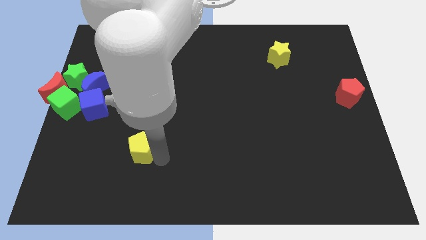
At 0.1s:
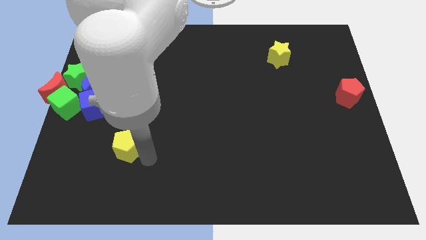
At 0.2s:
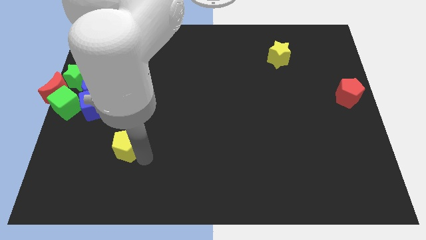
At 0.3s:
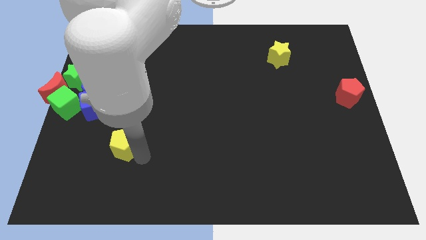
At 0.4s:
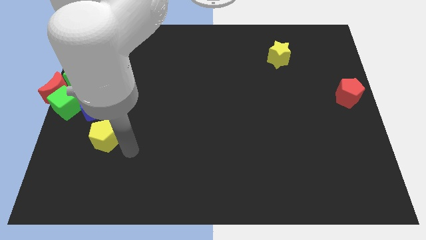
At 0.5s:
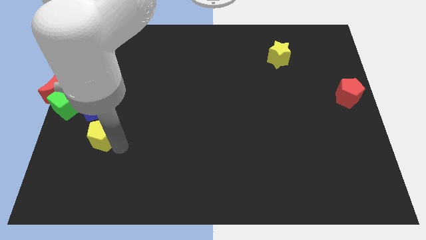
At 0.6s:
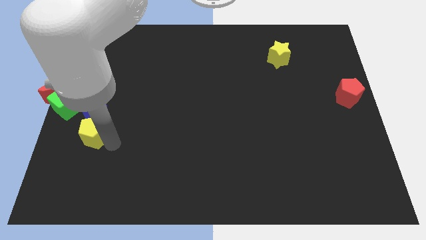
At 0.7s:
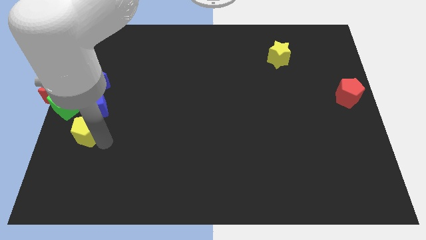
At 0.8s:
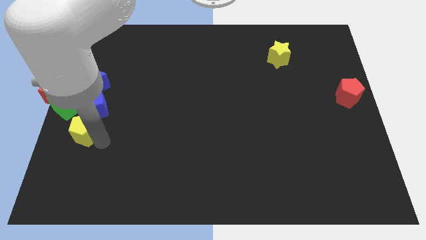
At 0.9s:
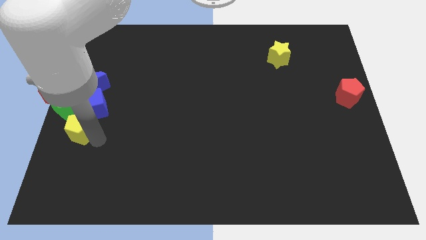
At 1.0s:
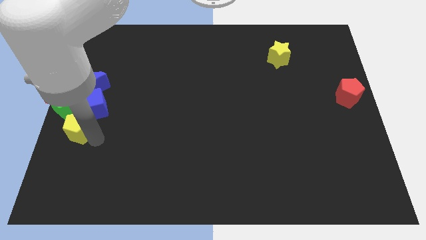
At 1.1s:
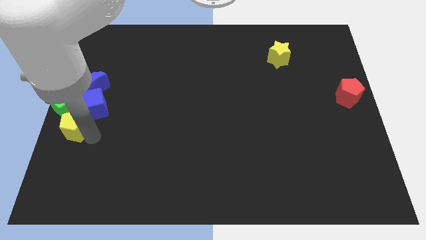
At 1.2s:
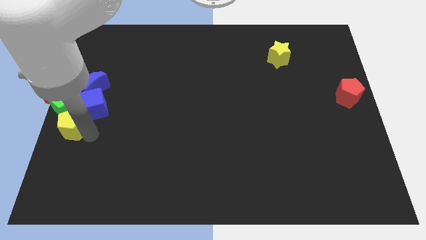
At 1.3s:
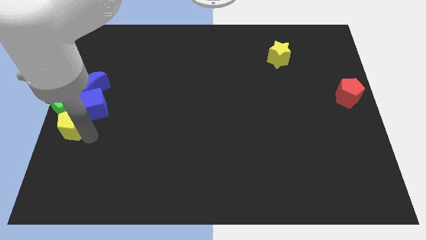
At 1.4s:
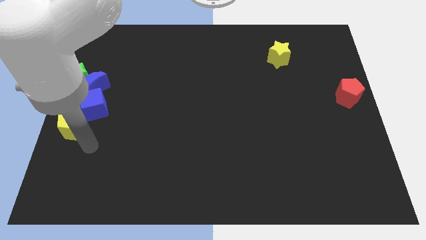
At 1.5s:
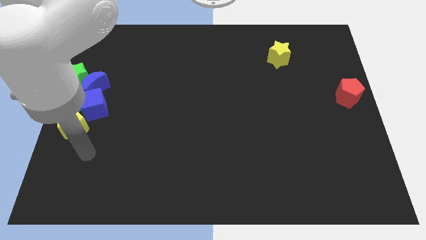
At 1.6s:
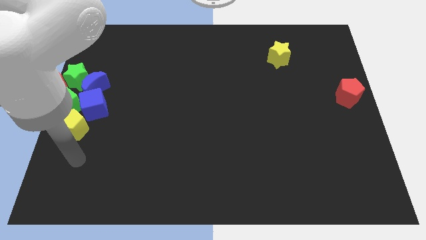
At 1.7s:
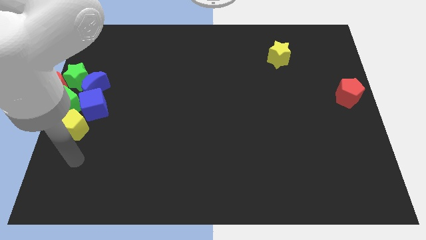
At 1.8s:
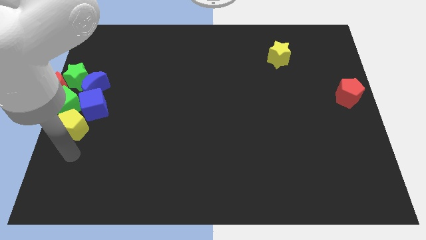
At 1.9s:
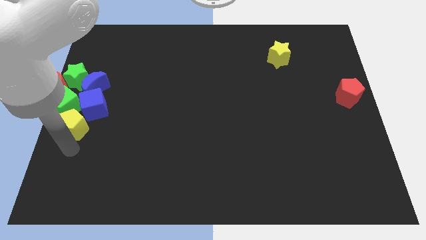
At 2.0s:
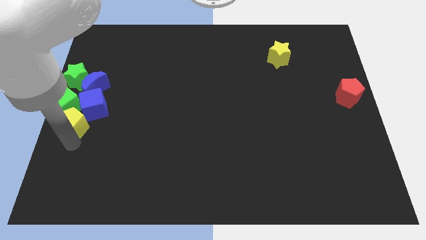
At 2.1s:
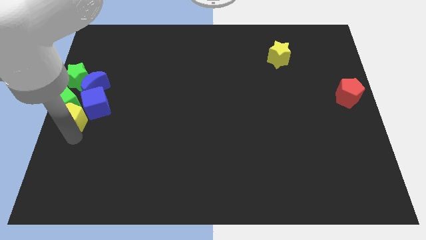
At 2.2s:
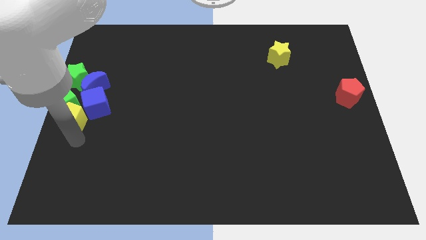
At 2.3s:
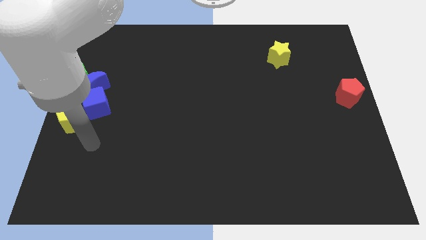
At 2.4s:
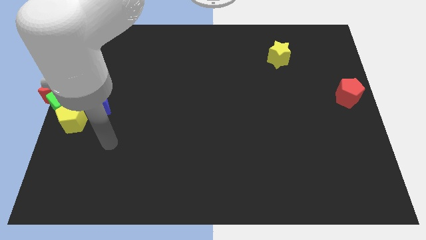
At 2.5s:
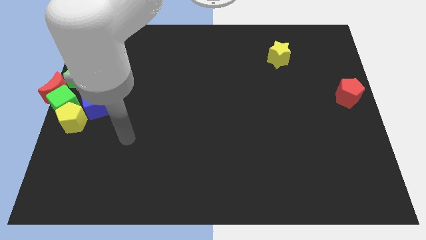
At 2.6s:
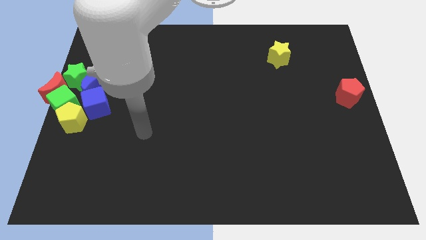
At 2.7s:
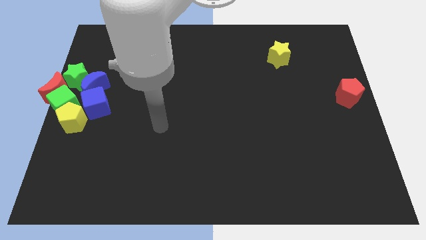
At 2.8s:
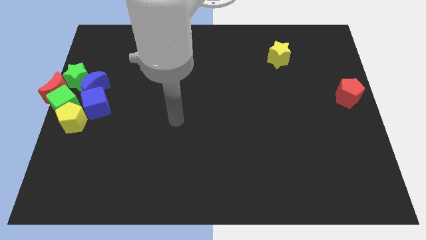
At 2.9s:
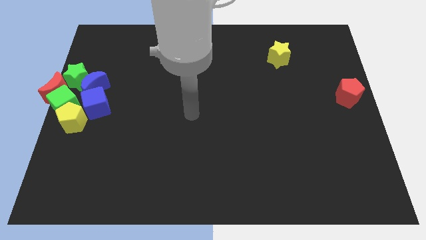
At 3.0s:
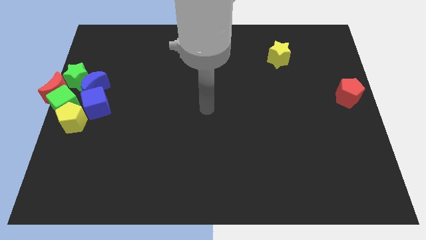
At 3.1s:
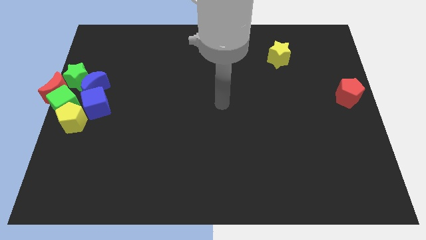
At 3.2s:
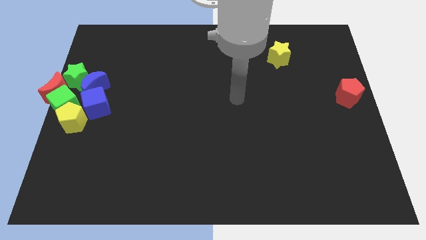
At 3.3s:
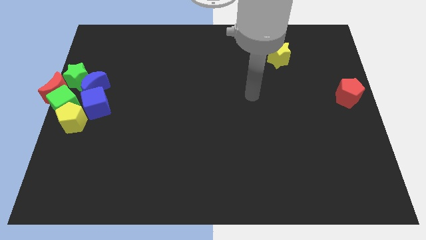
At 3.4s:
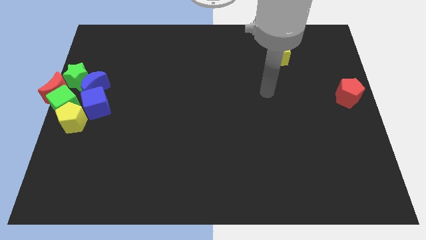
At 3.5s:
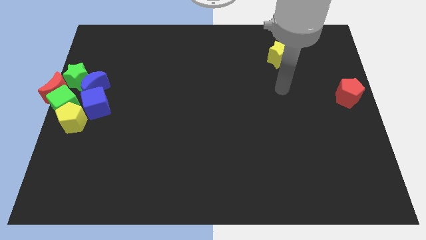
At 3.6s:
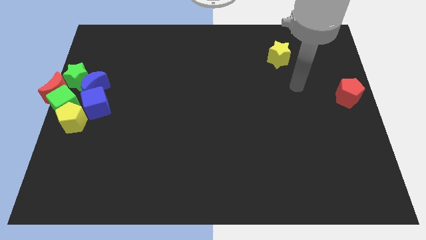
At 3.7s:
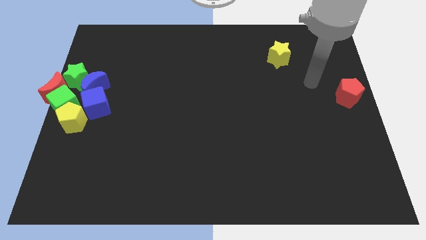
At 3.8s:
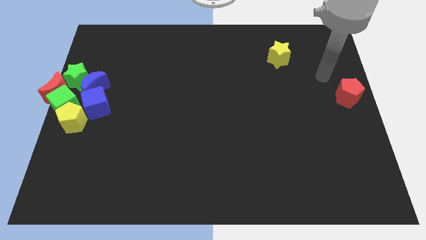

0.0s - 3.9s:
attach the yellow pentagon to the green cube

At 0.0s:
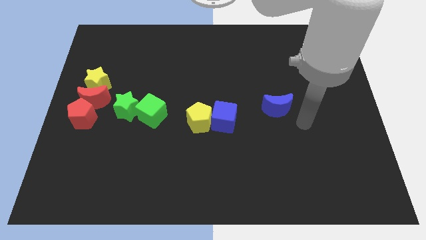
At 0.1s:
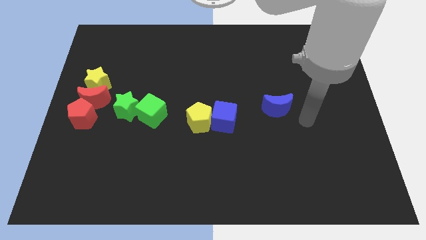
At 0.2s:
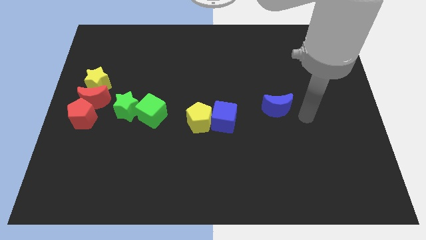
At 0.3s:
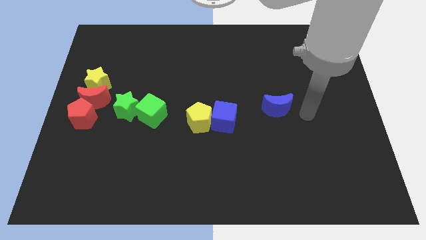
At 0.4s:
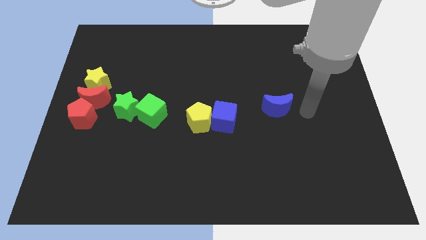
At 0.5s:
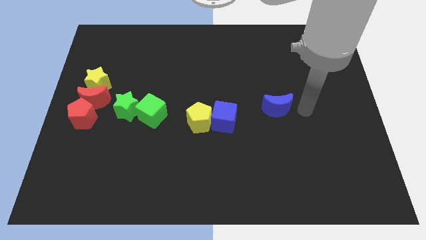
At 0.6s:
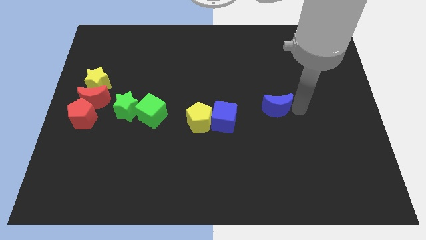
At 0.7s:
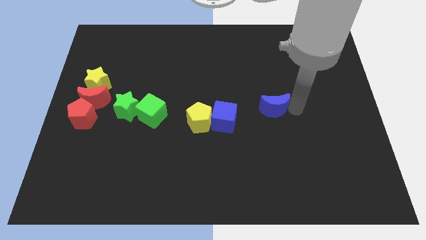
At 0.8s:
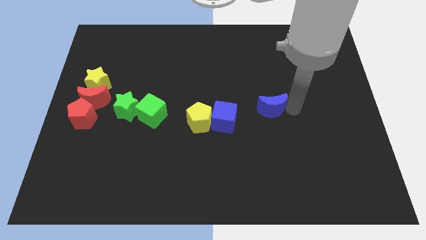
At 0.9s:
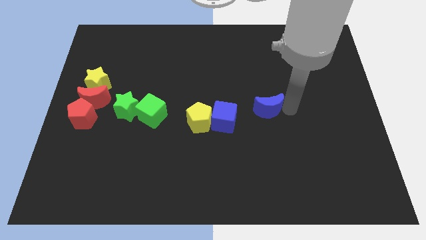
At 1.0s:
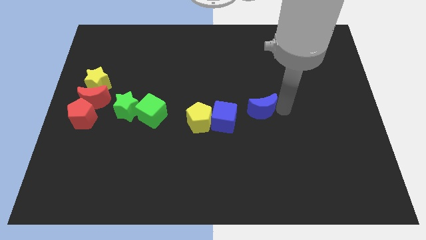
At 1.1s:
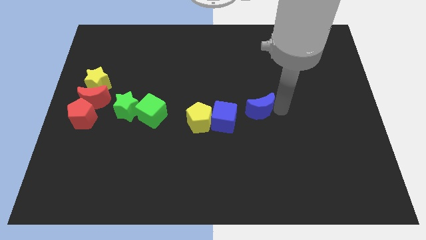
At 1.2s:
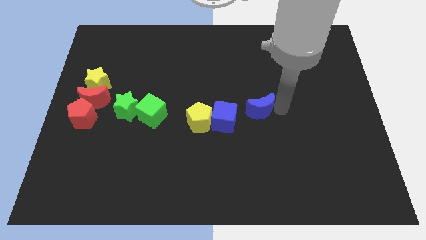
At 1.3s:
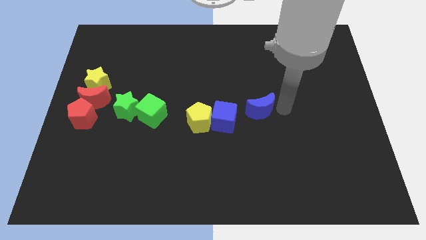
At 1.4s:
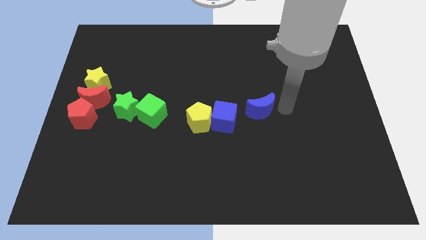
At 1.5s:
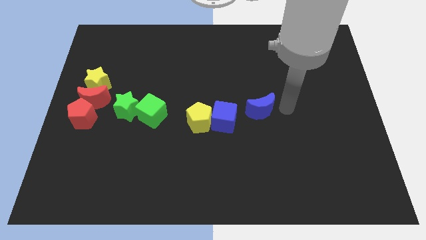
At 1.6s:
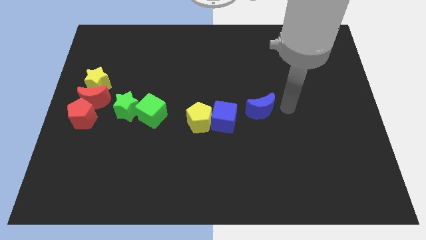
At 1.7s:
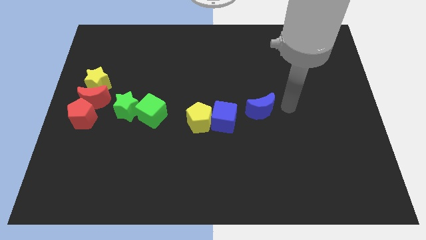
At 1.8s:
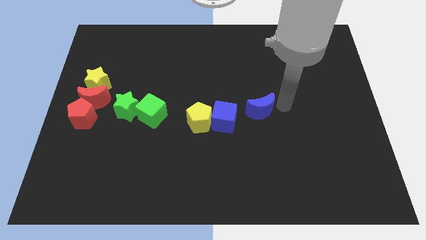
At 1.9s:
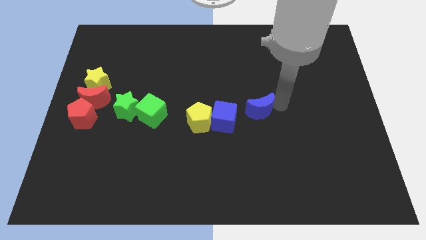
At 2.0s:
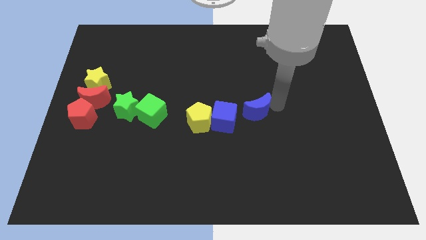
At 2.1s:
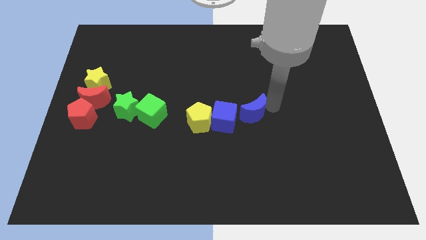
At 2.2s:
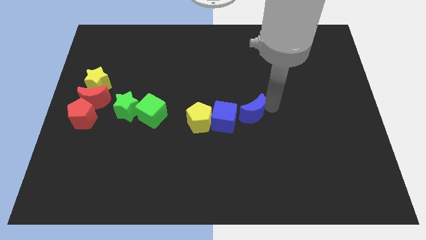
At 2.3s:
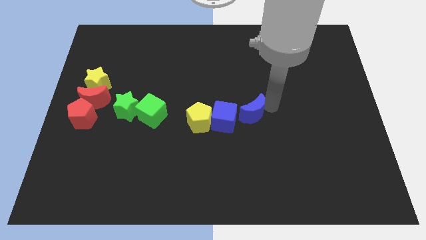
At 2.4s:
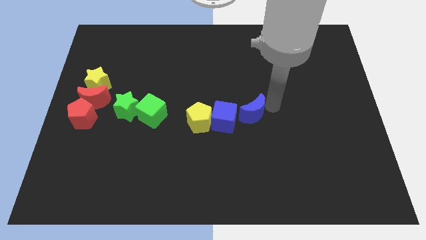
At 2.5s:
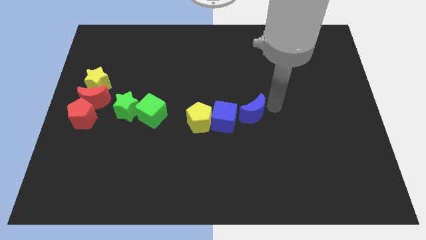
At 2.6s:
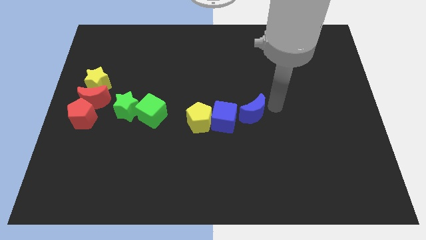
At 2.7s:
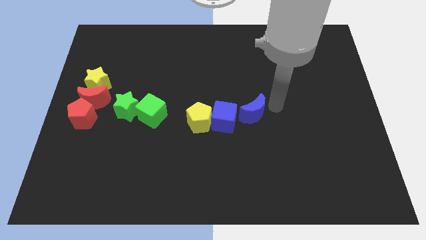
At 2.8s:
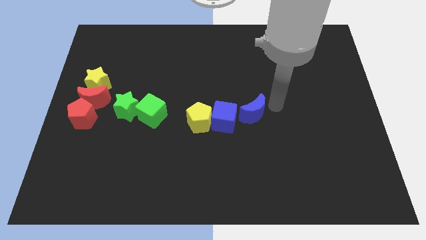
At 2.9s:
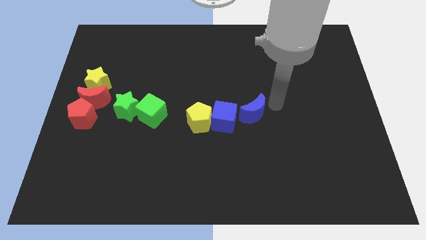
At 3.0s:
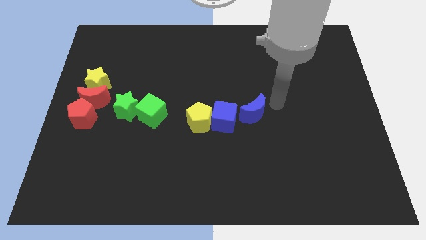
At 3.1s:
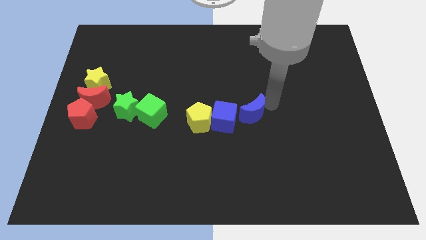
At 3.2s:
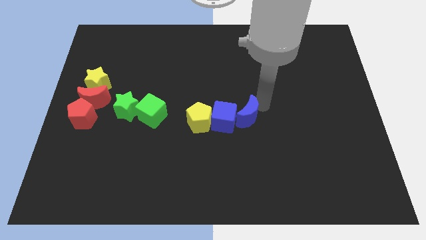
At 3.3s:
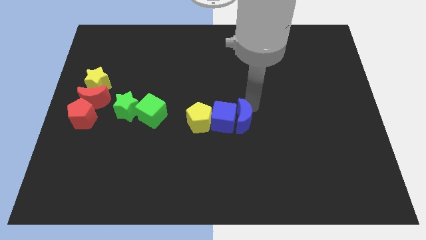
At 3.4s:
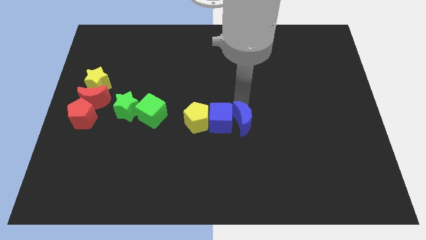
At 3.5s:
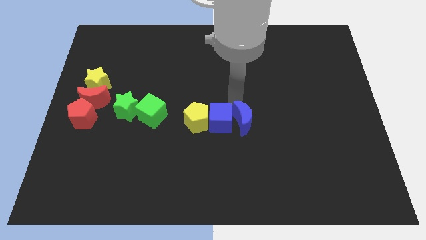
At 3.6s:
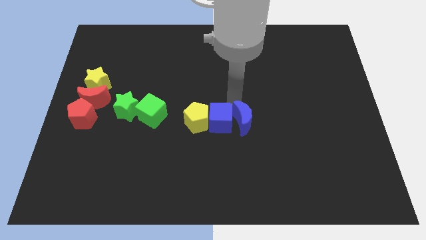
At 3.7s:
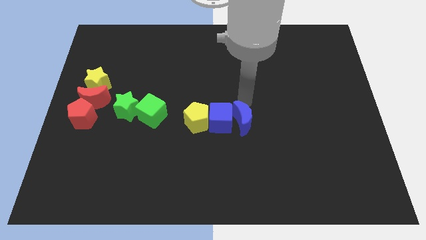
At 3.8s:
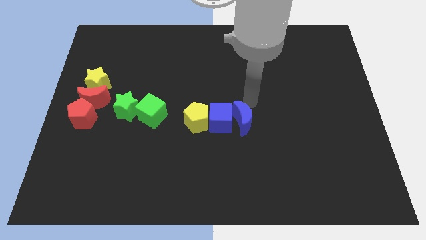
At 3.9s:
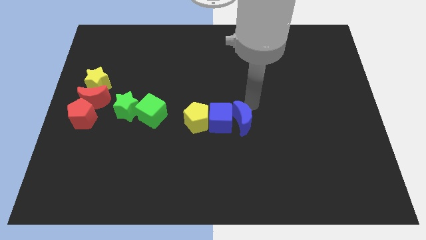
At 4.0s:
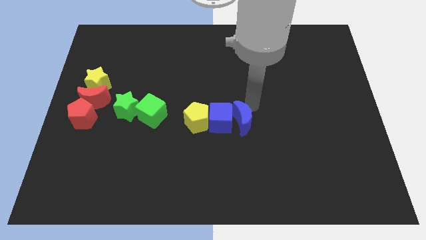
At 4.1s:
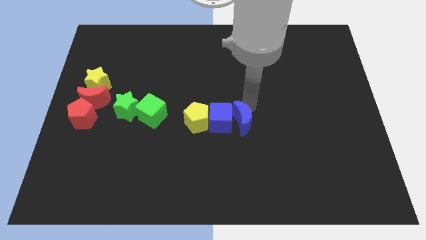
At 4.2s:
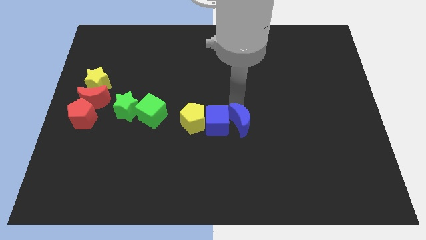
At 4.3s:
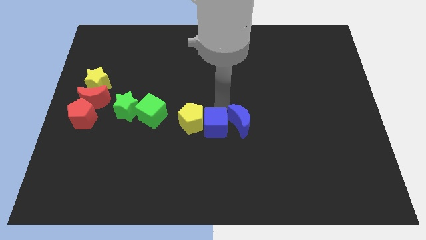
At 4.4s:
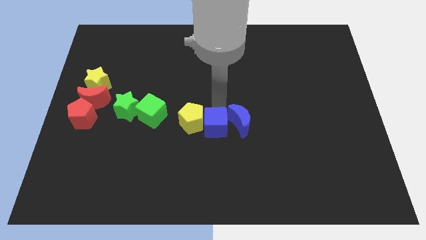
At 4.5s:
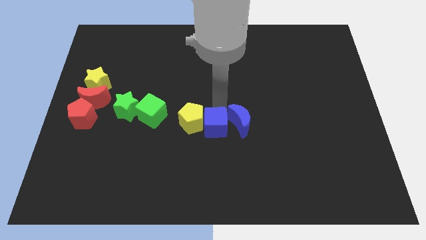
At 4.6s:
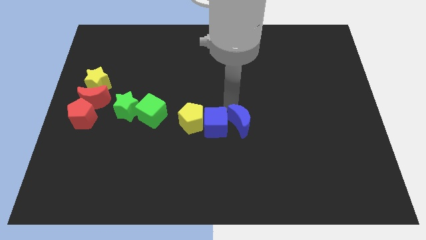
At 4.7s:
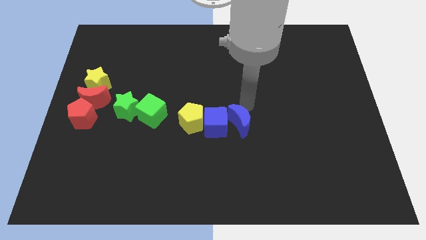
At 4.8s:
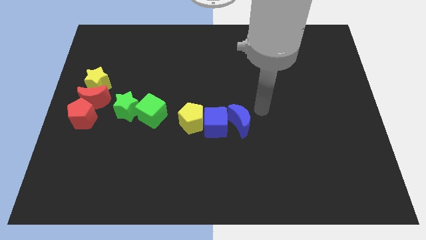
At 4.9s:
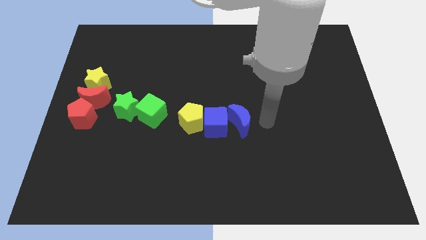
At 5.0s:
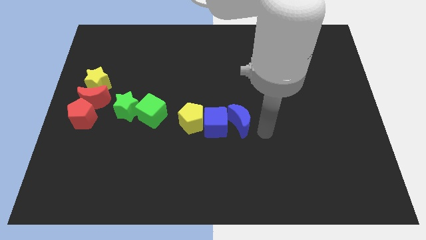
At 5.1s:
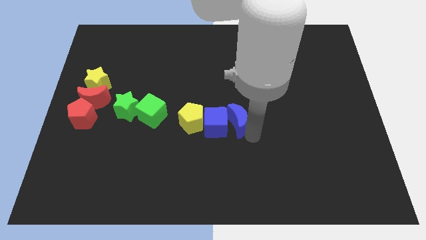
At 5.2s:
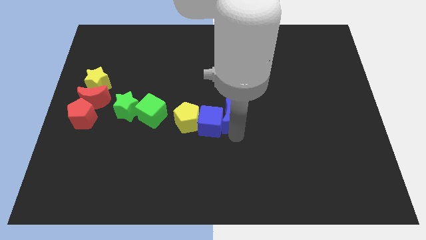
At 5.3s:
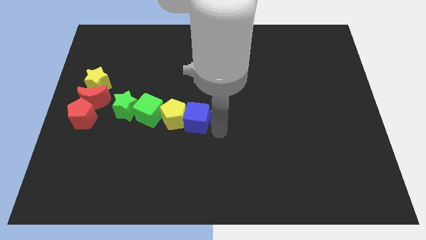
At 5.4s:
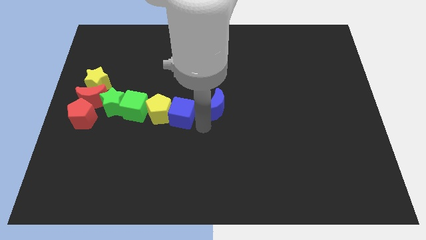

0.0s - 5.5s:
move the blue crescent into the blue cube
